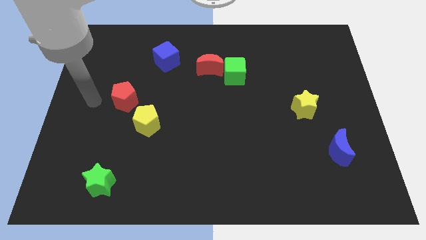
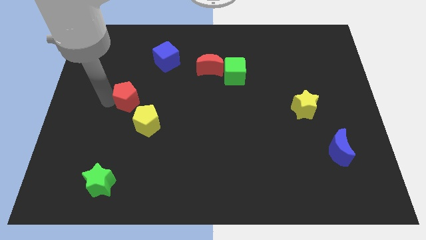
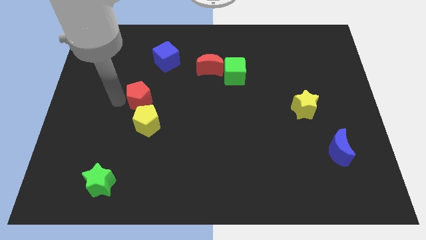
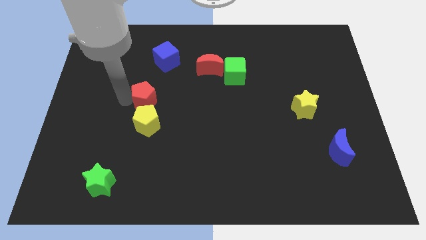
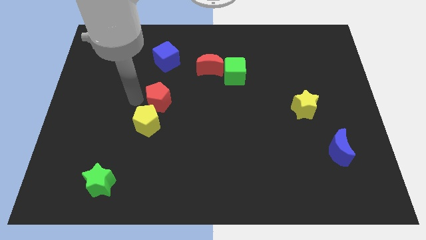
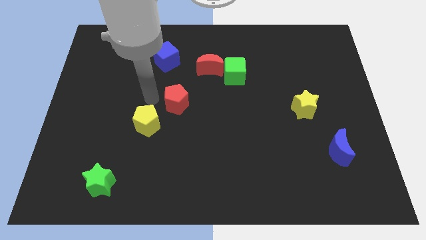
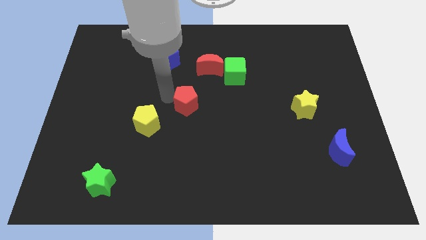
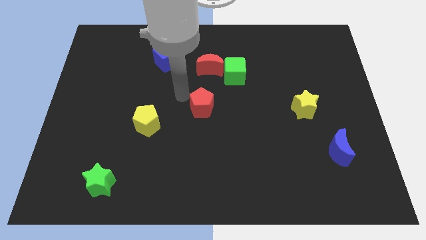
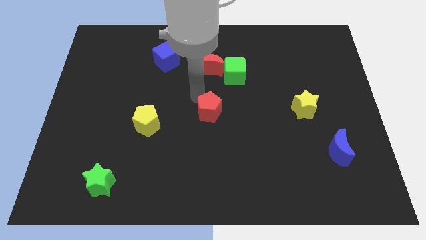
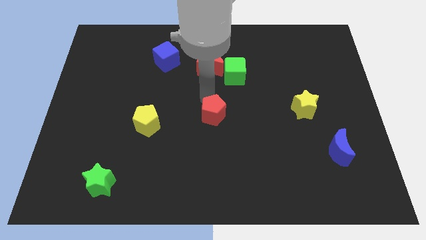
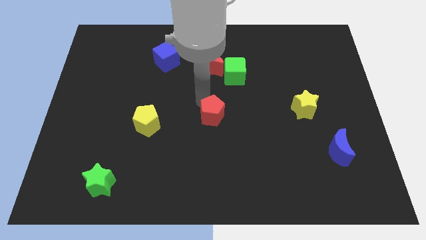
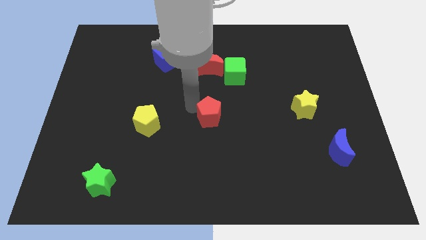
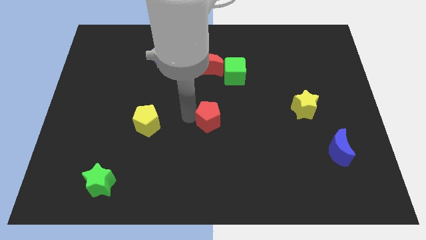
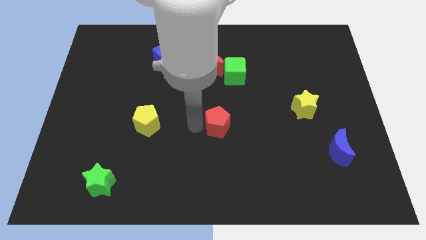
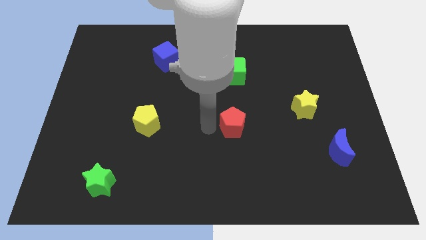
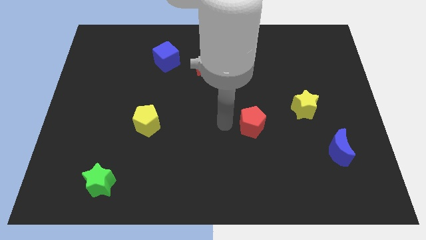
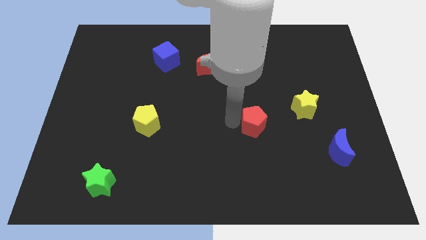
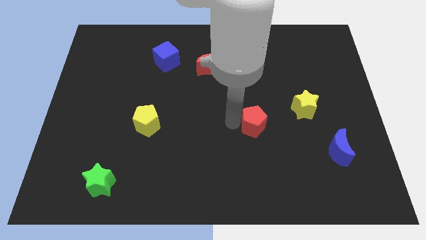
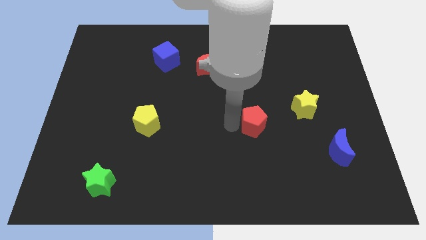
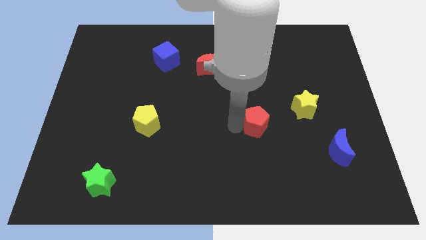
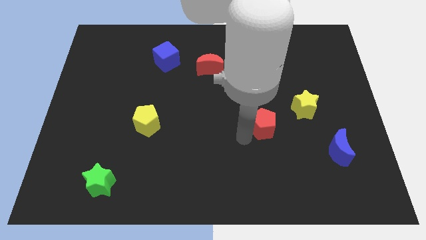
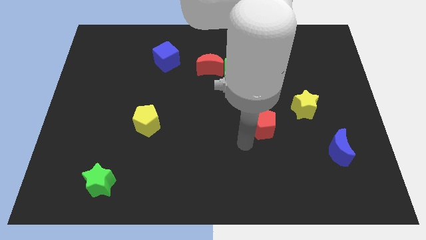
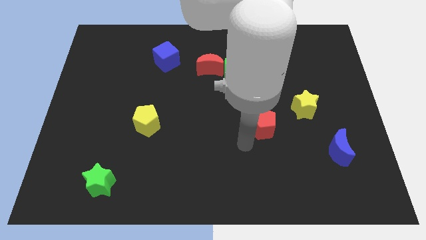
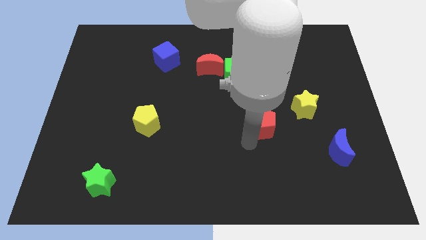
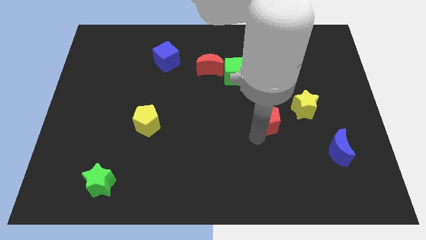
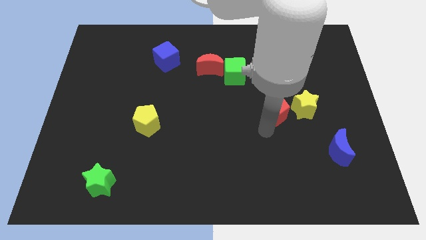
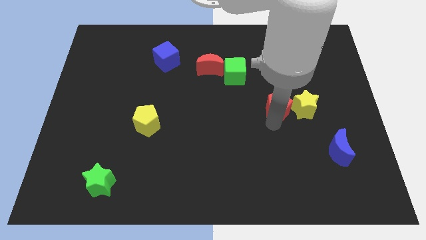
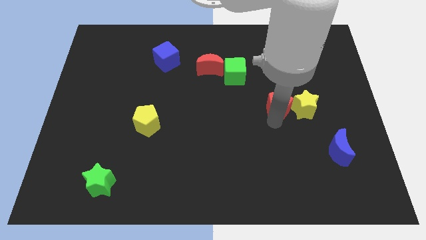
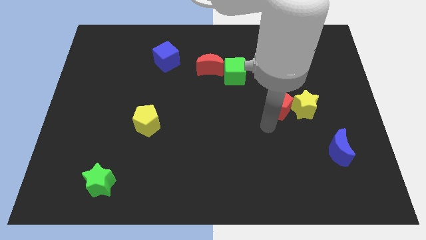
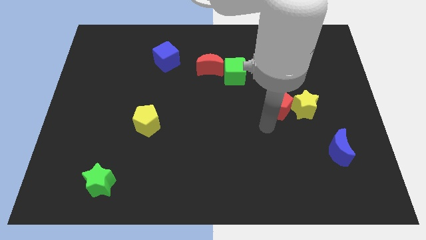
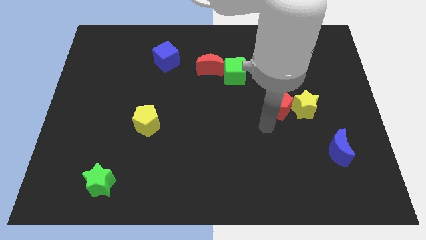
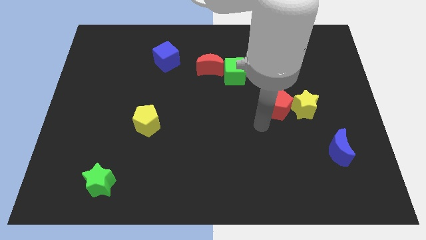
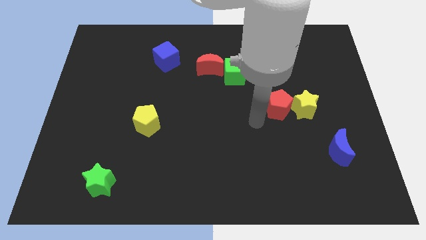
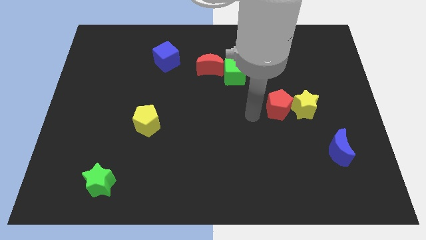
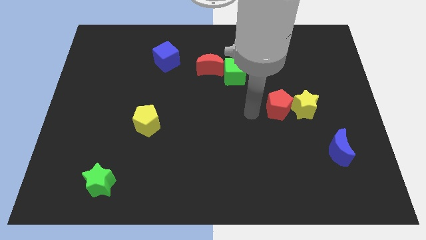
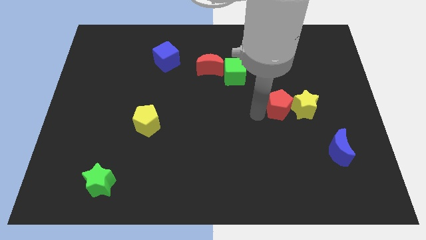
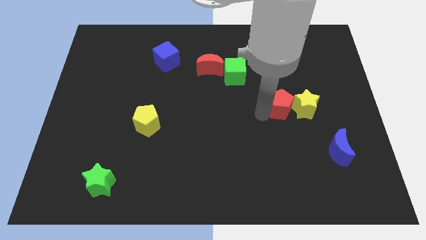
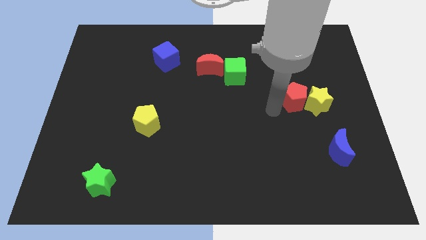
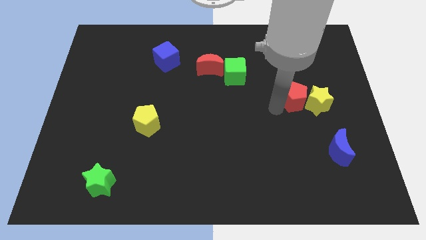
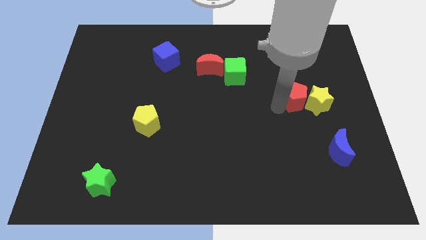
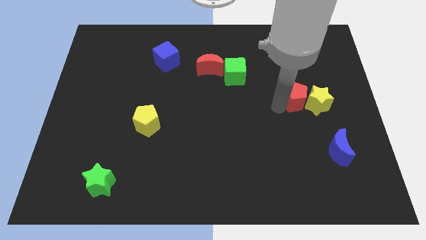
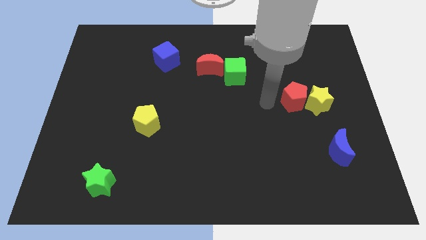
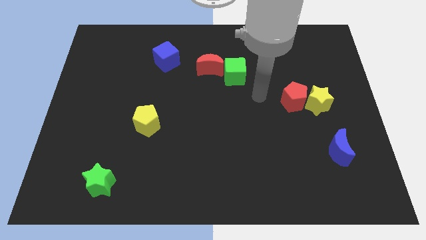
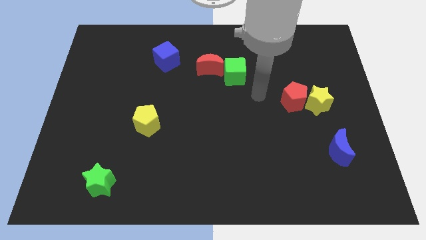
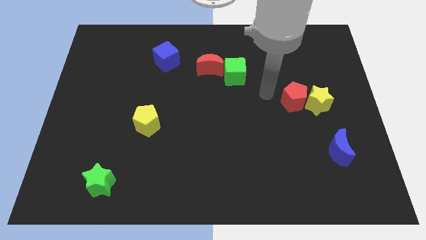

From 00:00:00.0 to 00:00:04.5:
place the red pentagon into the yellow star

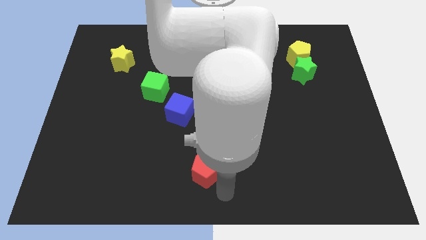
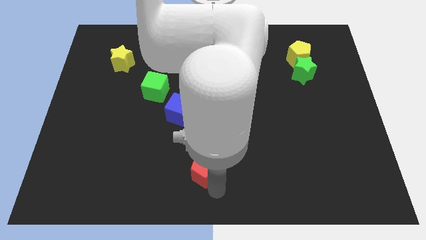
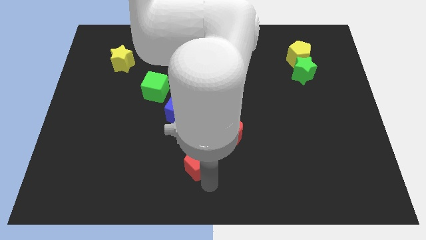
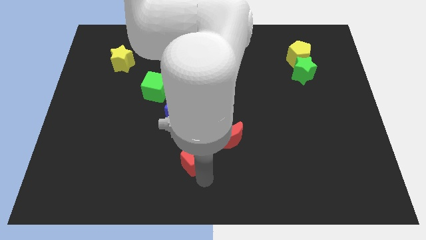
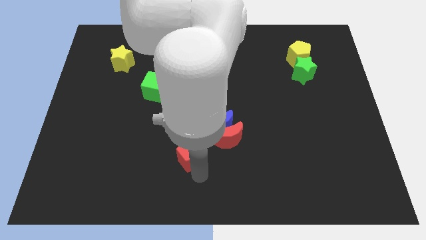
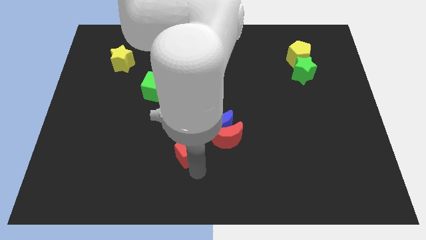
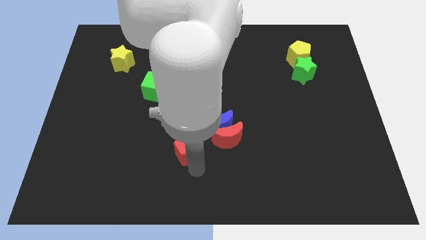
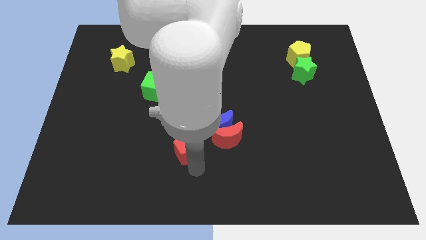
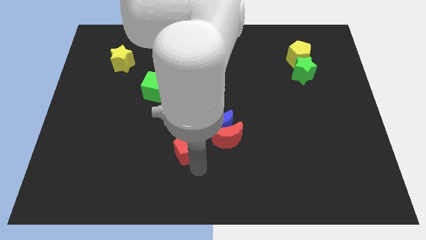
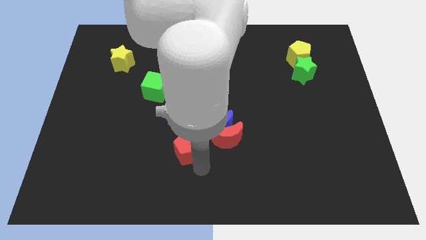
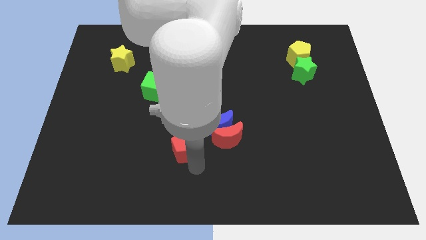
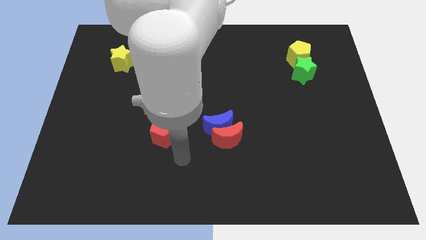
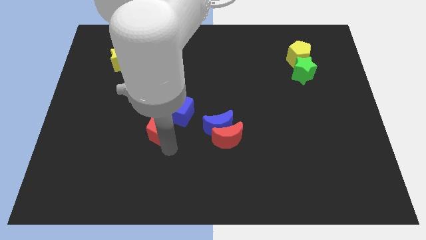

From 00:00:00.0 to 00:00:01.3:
place the red pentagon to the left side of the blue cube

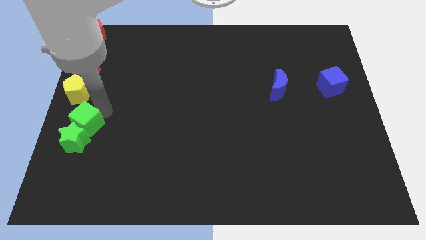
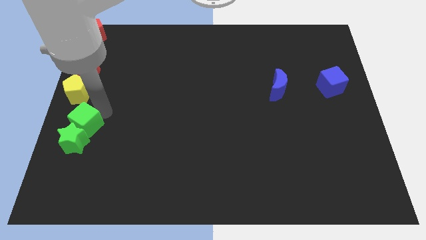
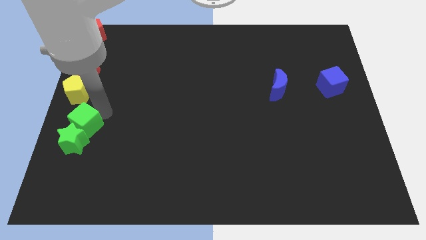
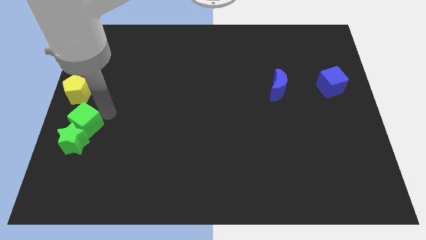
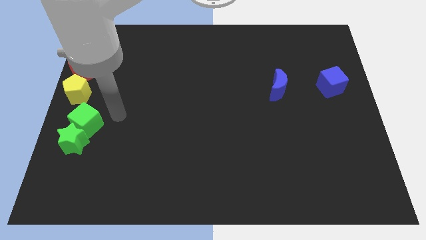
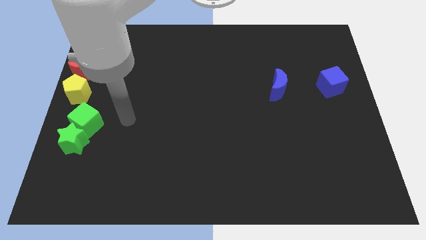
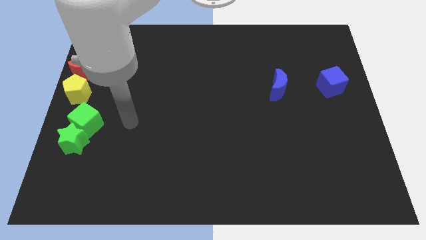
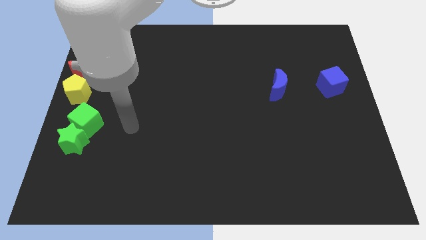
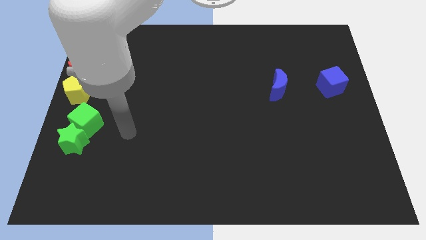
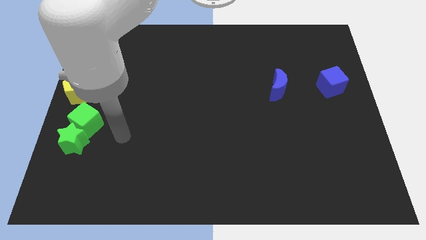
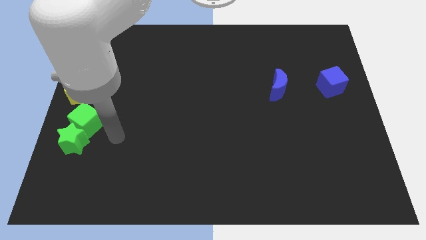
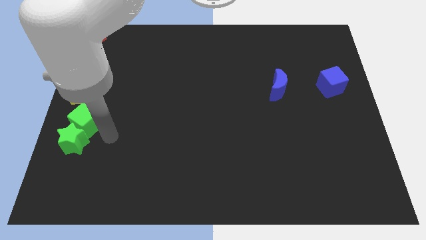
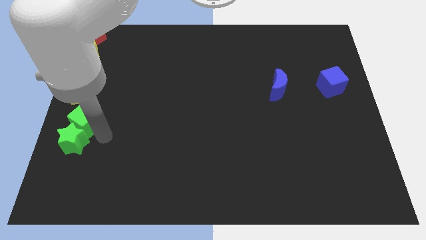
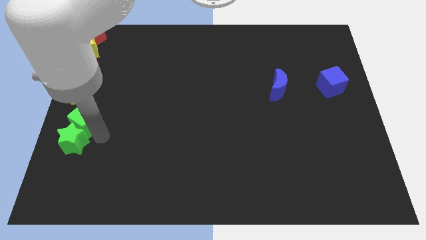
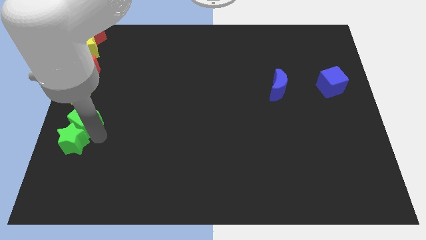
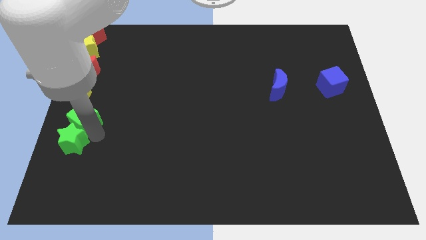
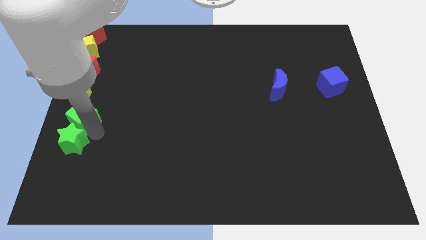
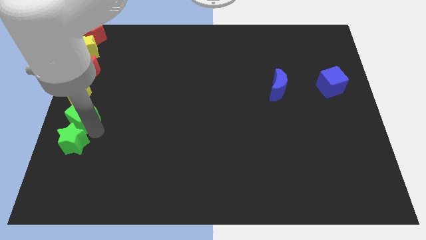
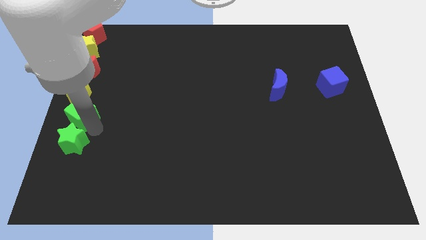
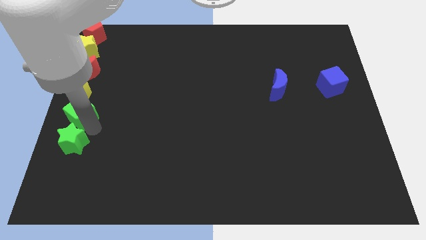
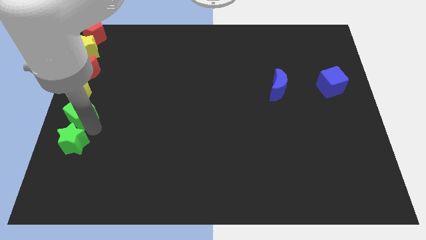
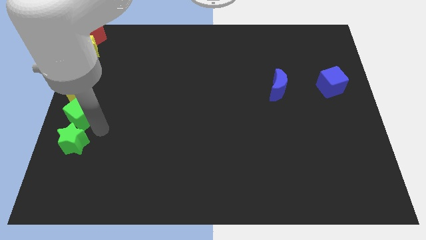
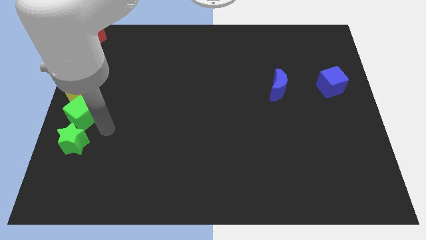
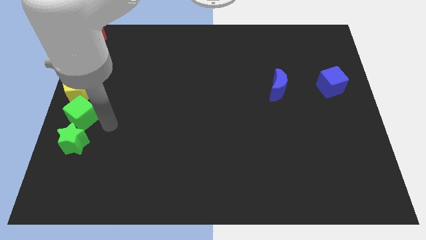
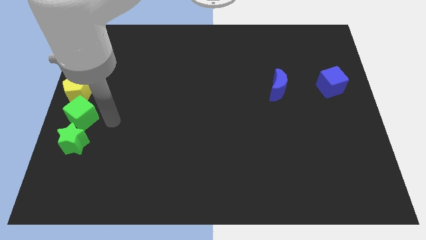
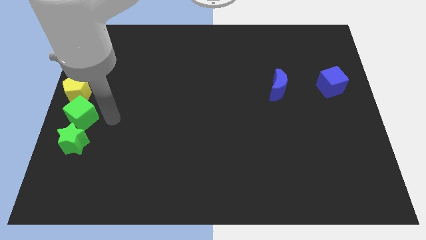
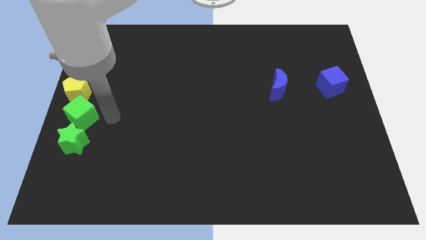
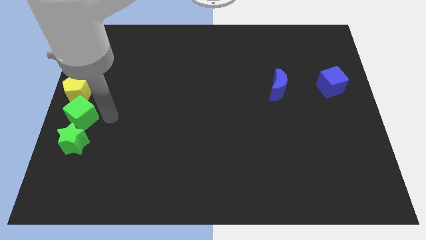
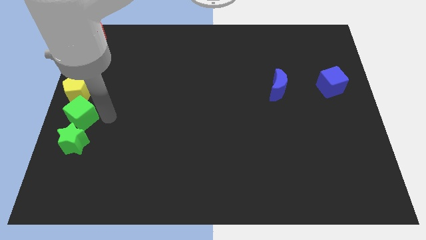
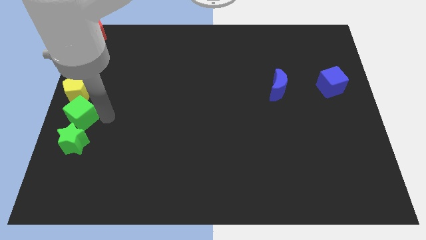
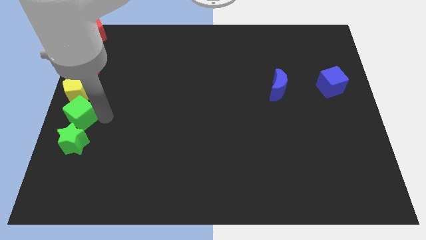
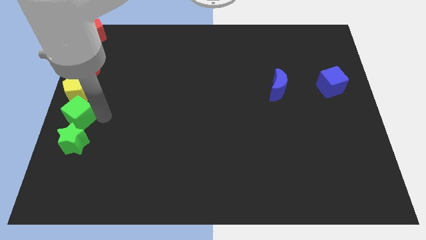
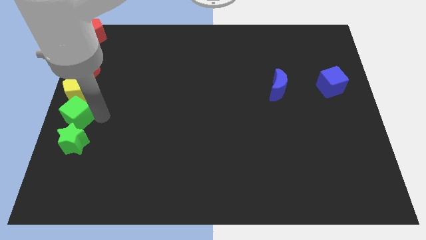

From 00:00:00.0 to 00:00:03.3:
move the green cube below yellow pentagon
